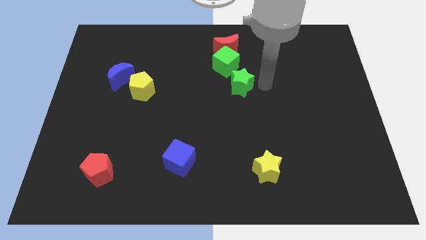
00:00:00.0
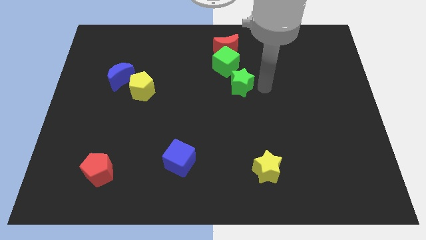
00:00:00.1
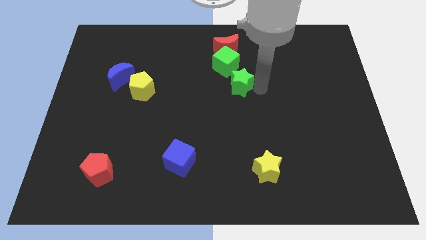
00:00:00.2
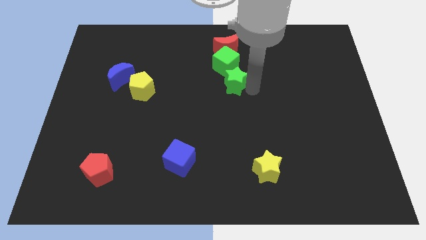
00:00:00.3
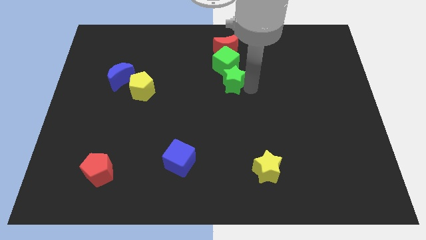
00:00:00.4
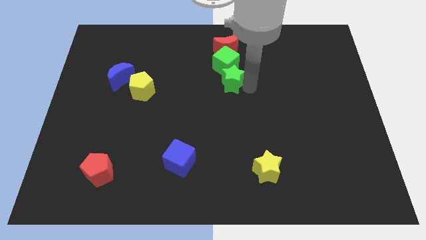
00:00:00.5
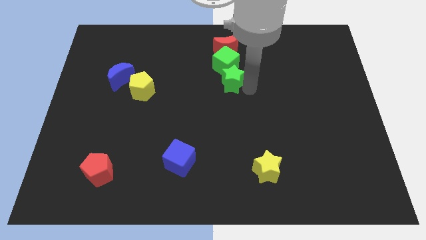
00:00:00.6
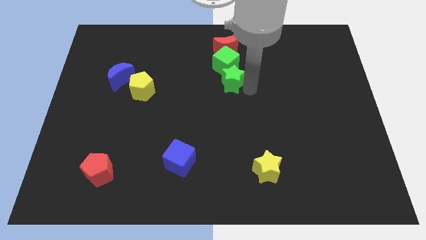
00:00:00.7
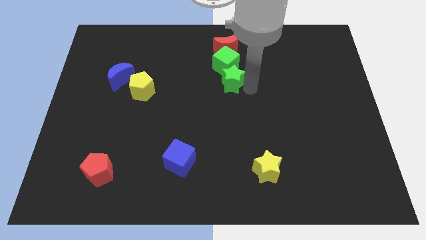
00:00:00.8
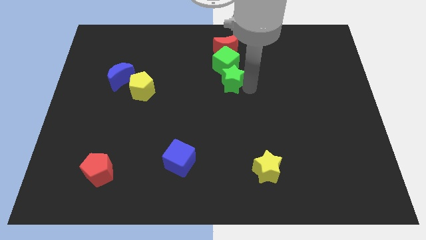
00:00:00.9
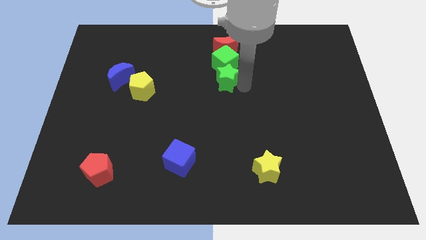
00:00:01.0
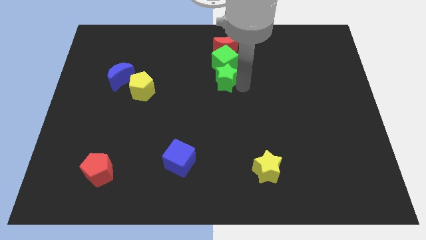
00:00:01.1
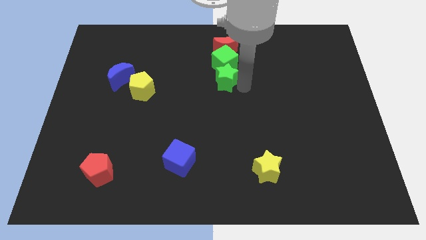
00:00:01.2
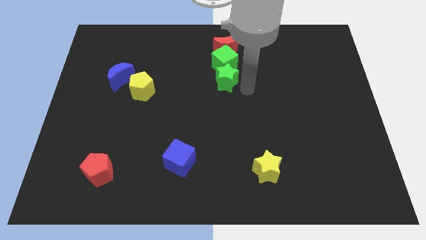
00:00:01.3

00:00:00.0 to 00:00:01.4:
adjust the green star to the bottom of the green cube

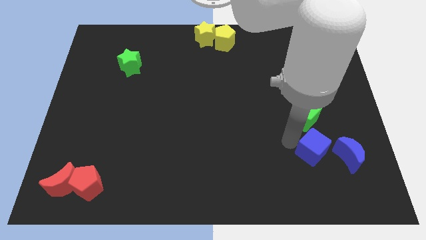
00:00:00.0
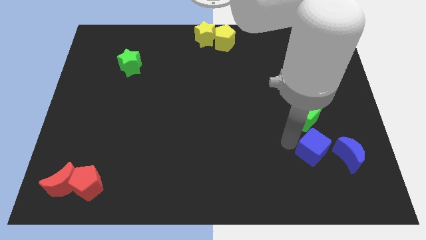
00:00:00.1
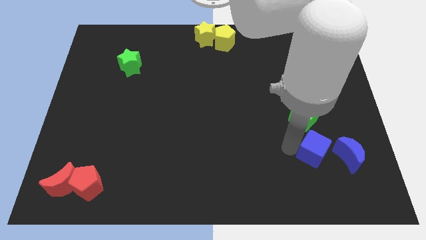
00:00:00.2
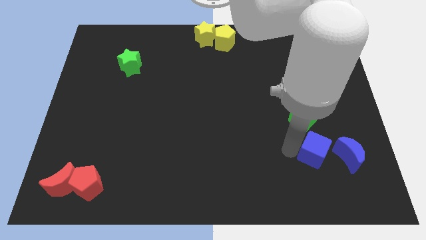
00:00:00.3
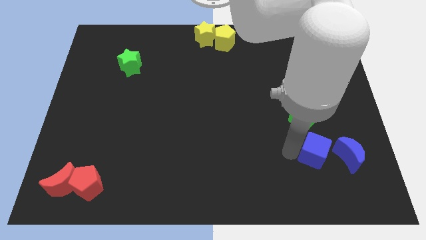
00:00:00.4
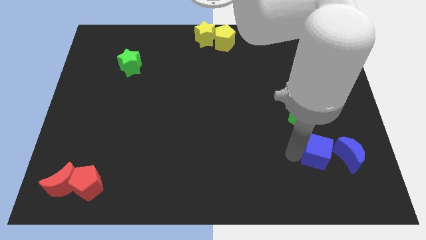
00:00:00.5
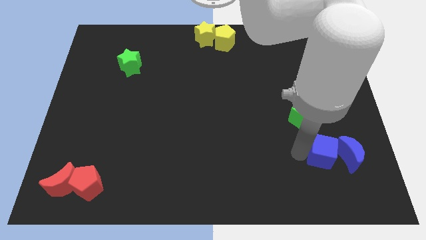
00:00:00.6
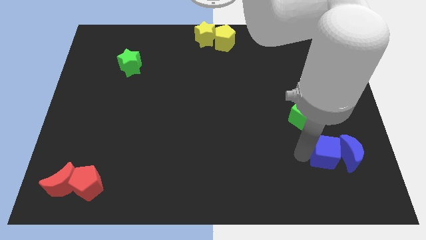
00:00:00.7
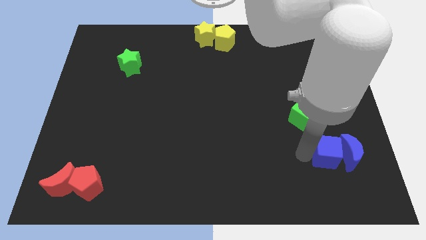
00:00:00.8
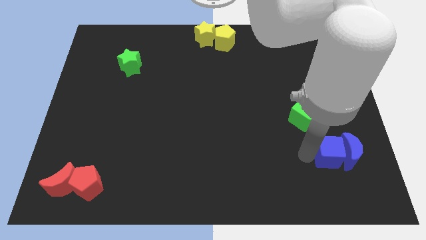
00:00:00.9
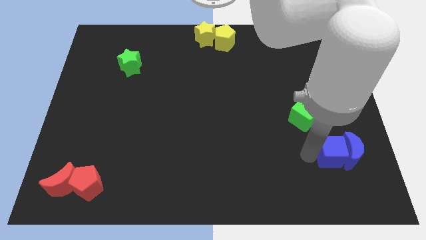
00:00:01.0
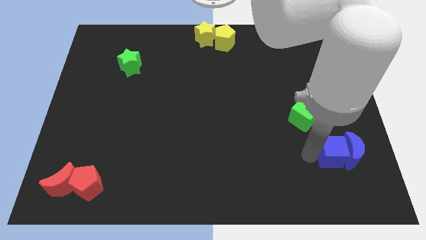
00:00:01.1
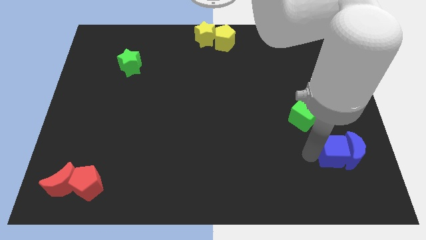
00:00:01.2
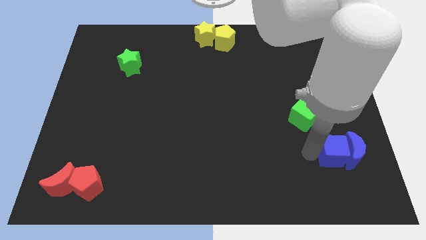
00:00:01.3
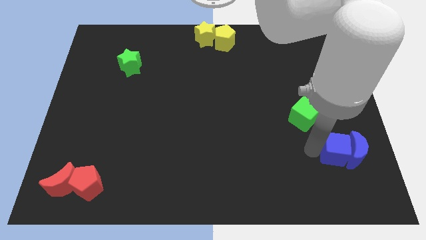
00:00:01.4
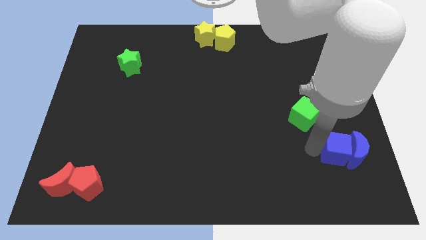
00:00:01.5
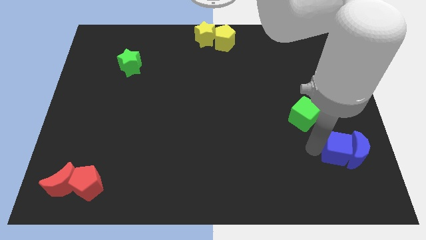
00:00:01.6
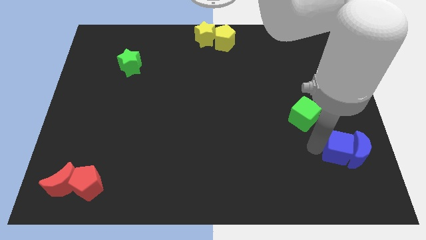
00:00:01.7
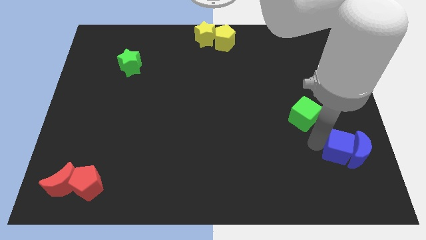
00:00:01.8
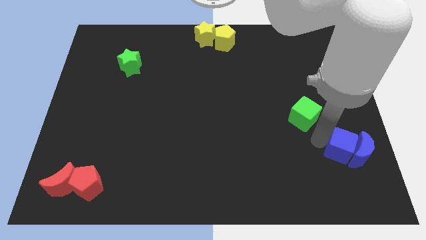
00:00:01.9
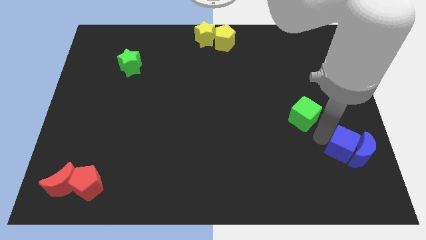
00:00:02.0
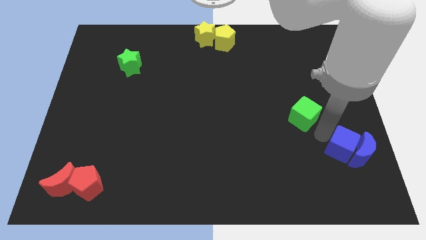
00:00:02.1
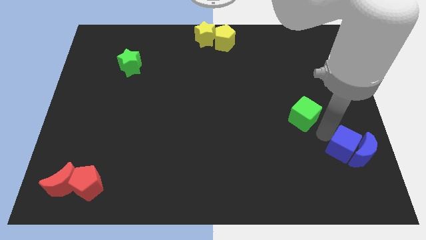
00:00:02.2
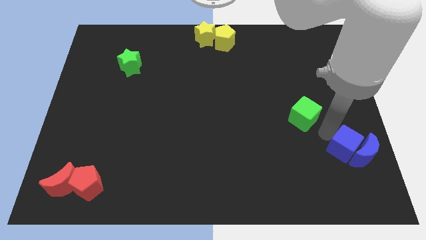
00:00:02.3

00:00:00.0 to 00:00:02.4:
push blue cube towards blue crescent

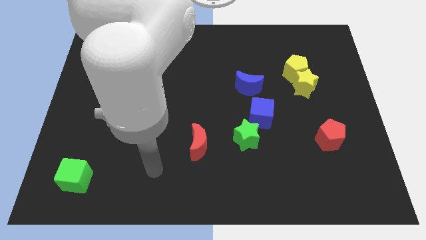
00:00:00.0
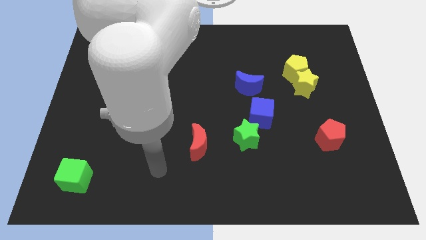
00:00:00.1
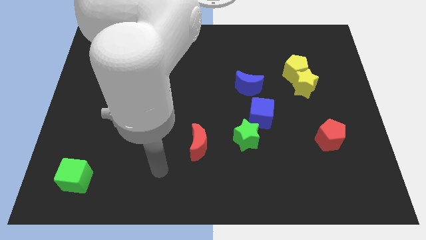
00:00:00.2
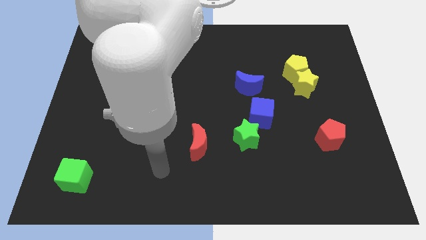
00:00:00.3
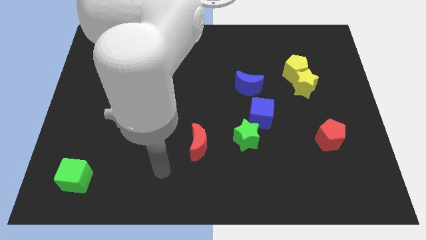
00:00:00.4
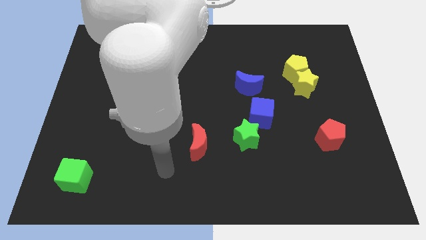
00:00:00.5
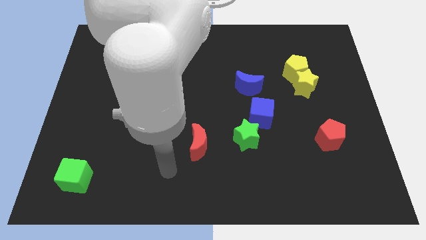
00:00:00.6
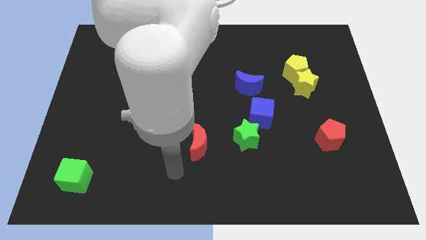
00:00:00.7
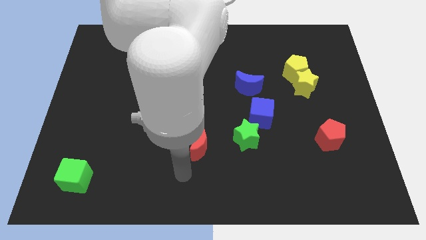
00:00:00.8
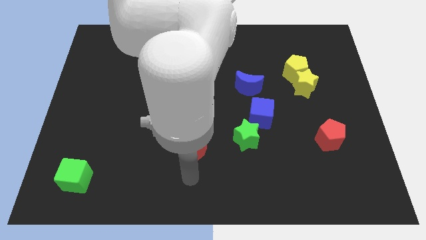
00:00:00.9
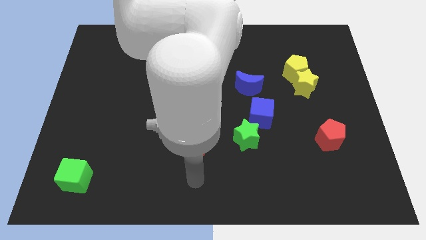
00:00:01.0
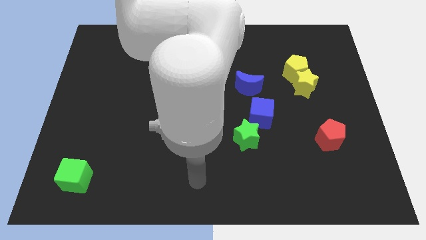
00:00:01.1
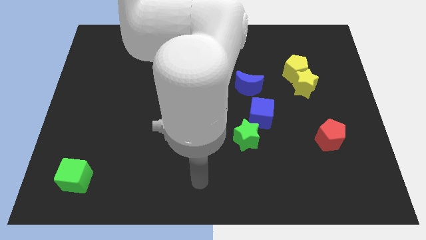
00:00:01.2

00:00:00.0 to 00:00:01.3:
move your arm to the bottom of the red crescent

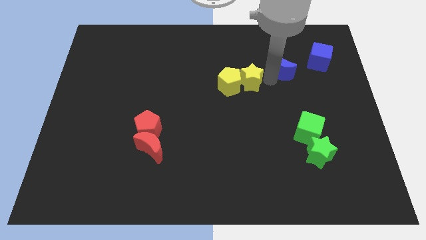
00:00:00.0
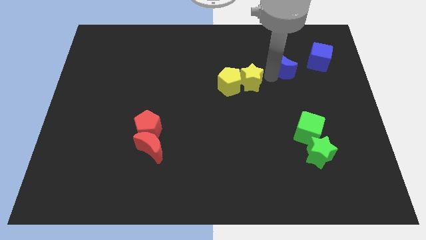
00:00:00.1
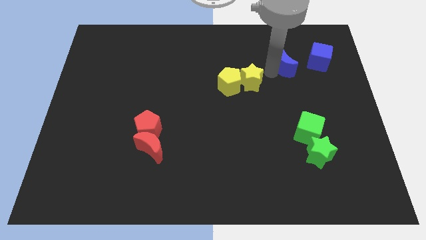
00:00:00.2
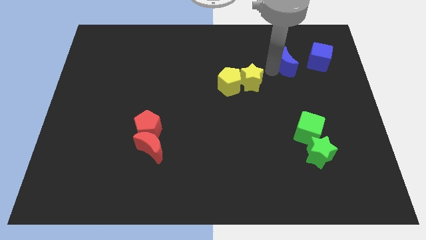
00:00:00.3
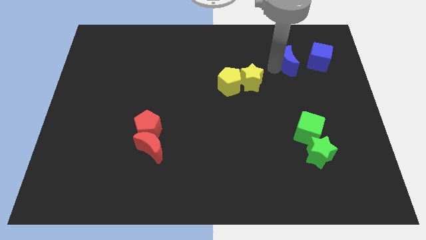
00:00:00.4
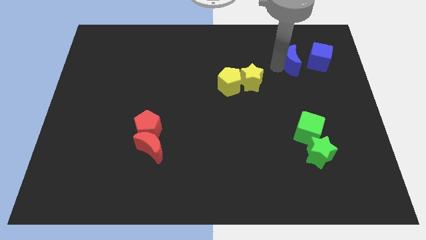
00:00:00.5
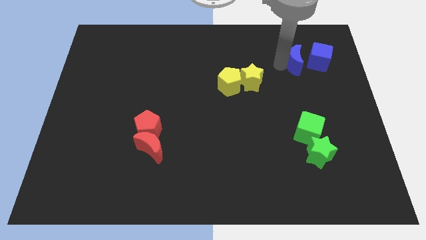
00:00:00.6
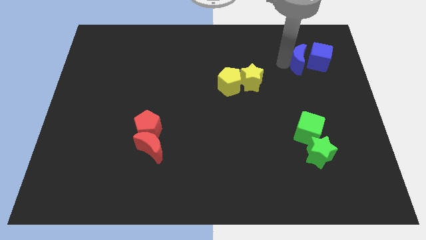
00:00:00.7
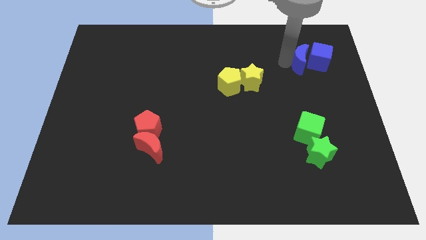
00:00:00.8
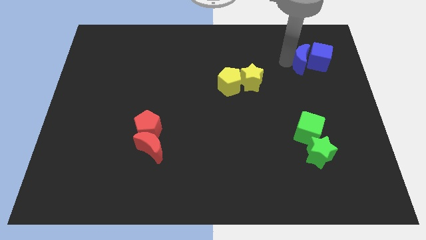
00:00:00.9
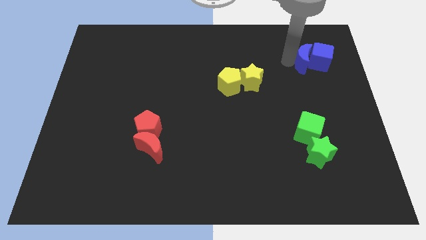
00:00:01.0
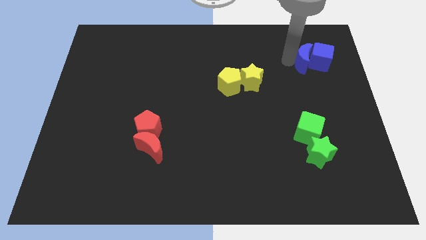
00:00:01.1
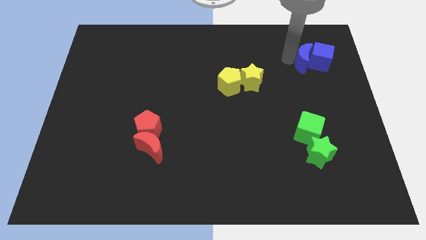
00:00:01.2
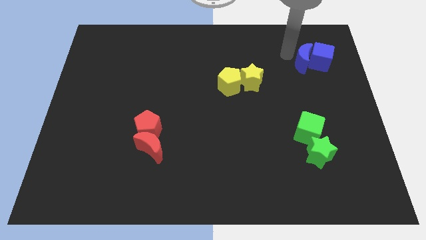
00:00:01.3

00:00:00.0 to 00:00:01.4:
push the blue crescent towards the blue cube

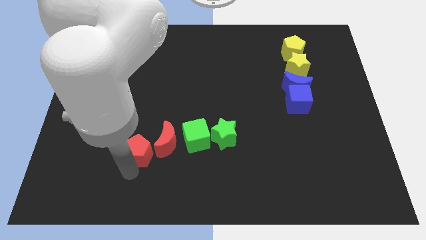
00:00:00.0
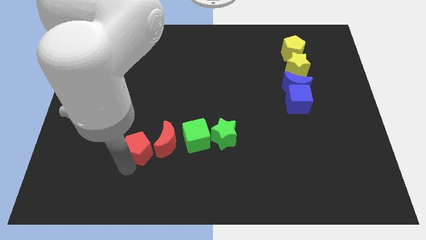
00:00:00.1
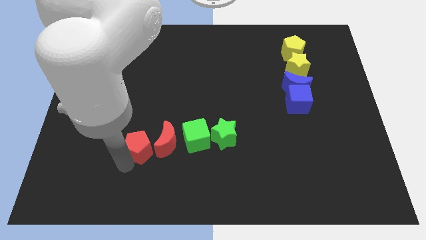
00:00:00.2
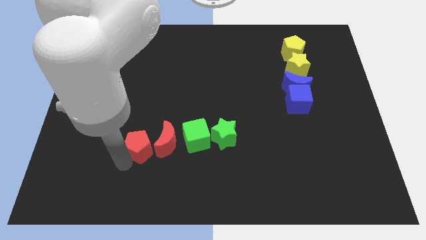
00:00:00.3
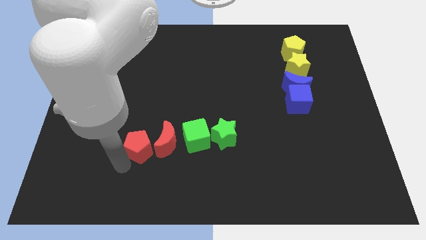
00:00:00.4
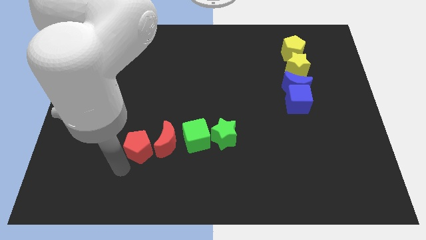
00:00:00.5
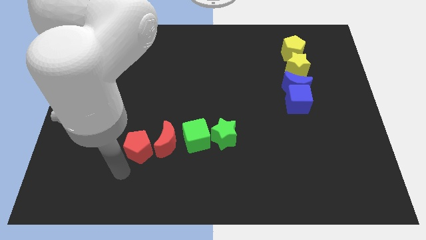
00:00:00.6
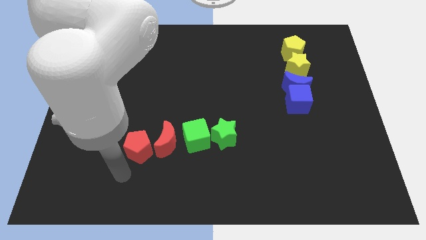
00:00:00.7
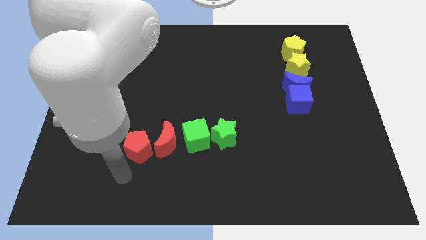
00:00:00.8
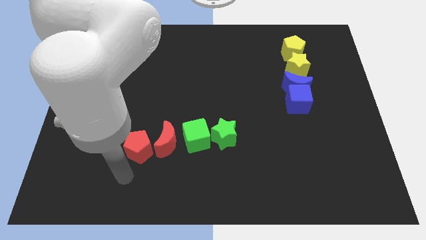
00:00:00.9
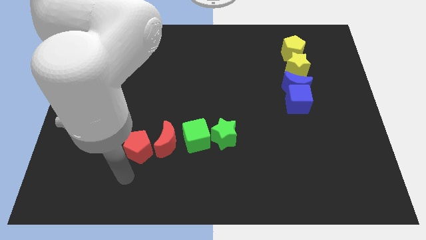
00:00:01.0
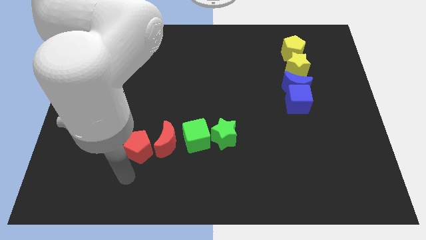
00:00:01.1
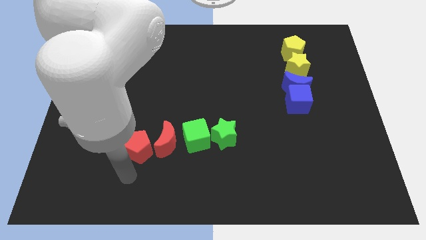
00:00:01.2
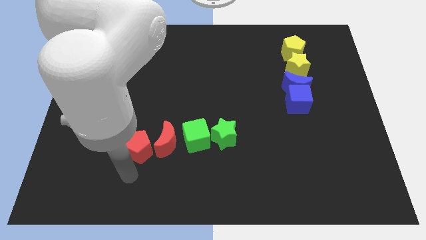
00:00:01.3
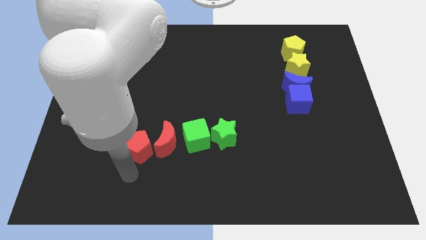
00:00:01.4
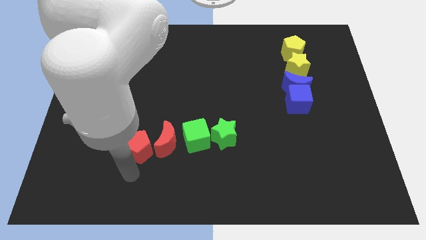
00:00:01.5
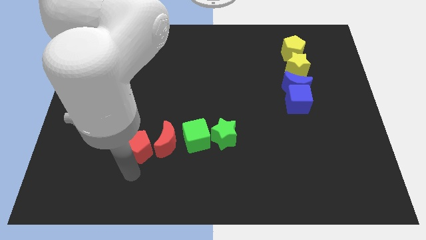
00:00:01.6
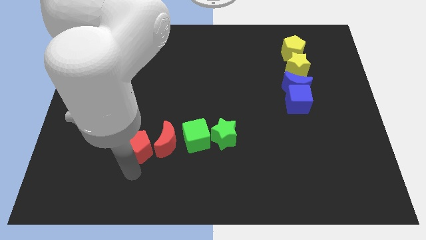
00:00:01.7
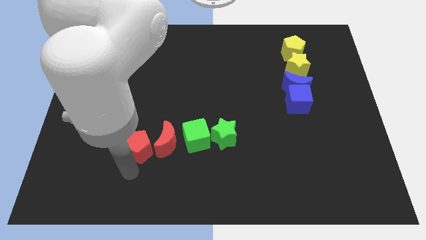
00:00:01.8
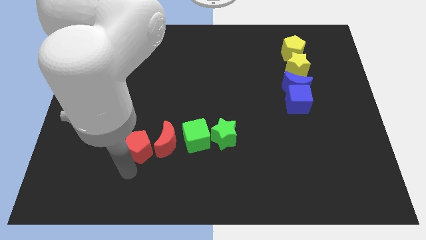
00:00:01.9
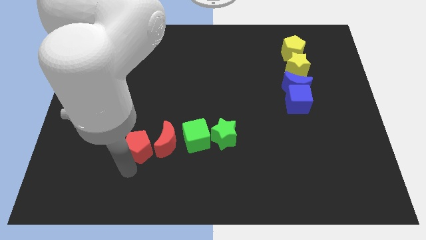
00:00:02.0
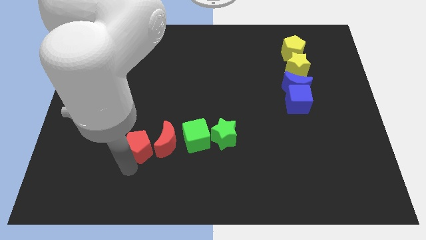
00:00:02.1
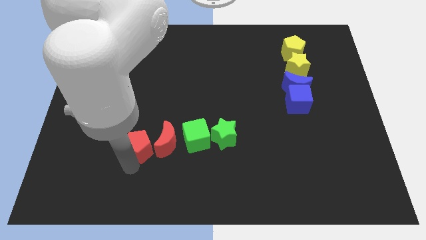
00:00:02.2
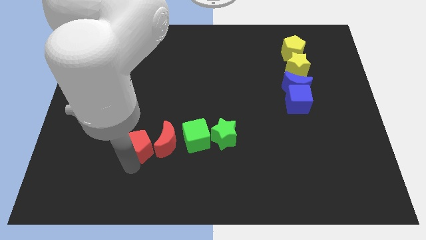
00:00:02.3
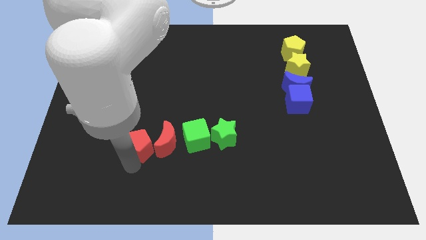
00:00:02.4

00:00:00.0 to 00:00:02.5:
move the red pentagon to the left side of the red moon

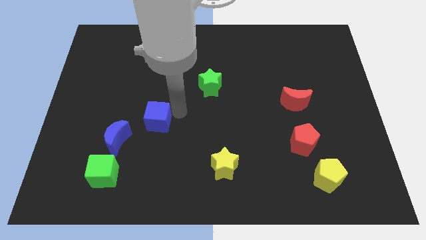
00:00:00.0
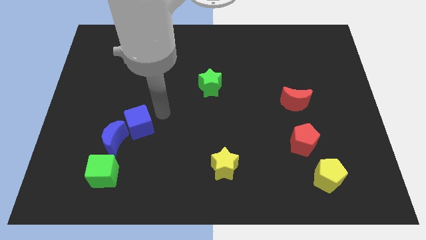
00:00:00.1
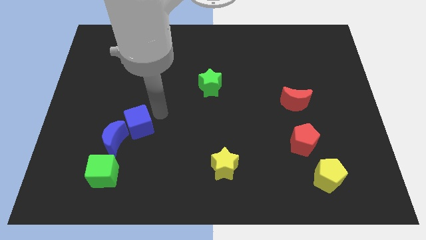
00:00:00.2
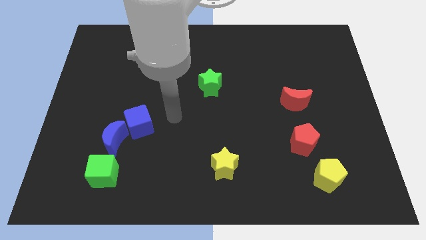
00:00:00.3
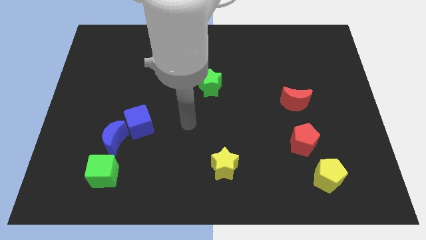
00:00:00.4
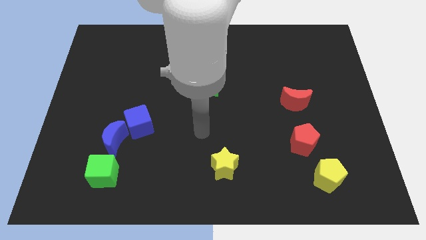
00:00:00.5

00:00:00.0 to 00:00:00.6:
put blue cube on the top of blue moon
